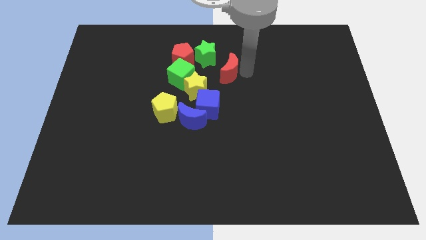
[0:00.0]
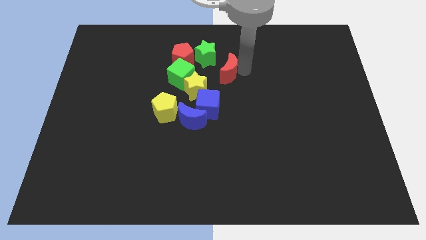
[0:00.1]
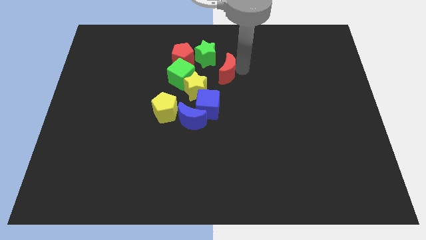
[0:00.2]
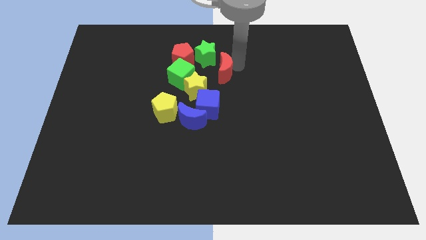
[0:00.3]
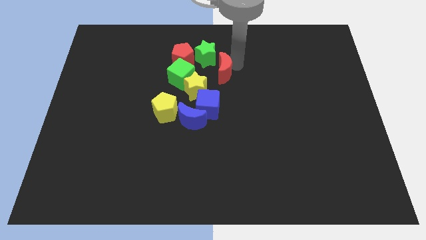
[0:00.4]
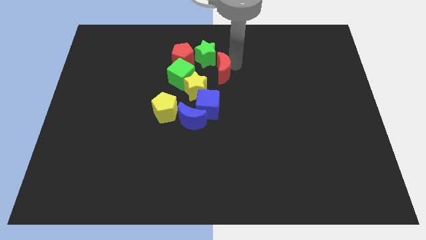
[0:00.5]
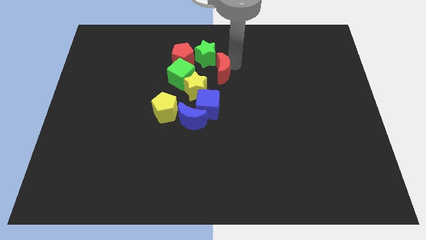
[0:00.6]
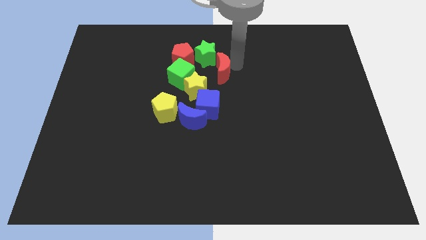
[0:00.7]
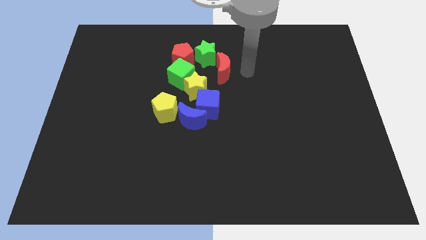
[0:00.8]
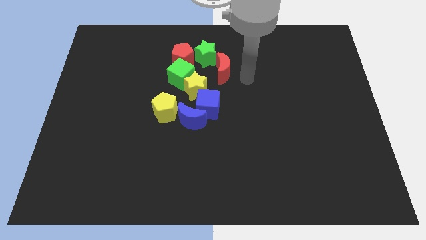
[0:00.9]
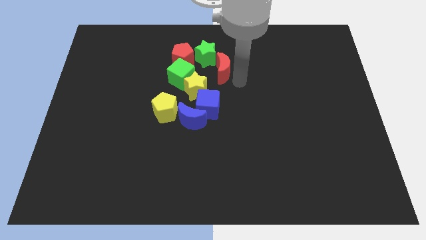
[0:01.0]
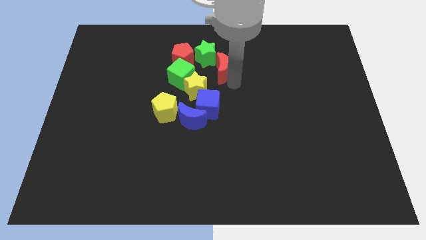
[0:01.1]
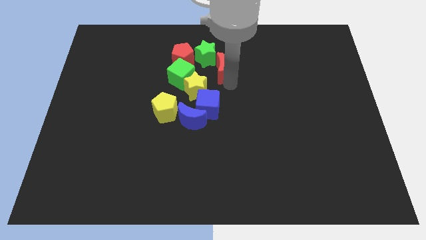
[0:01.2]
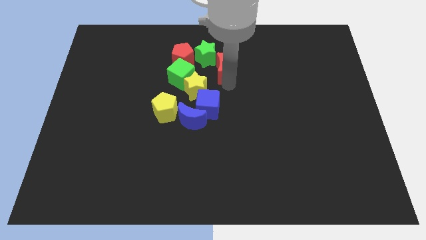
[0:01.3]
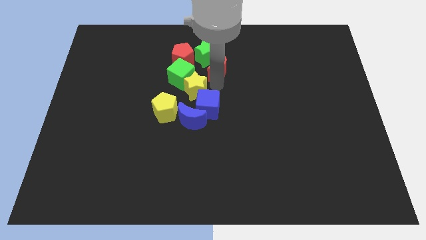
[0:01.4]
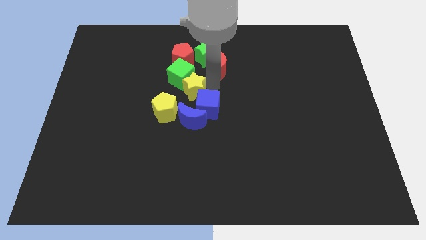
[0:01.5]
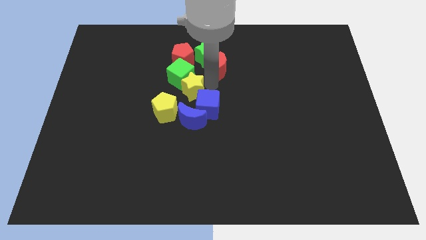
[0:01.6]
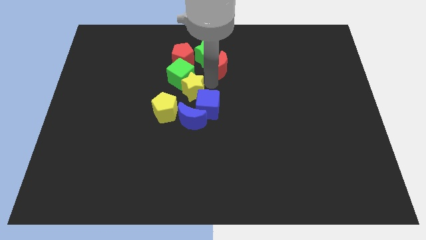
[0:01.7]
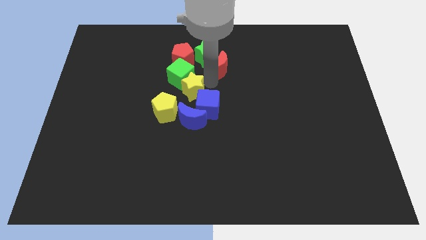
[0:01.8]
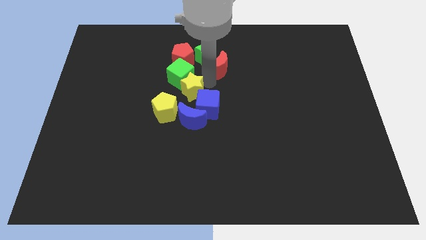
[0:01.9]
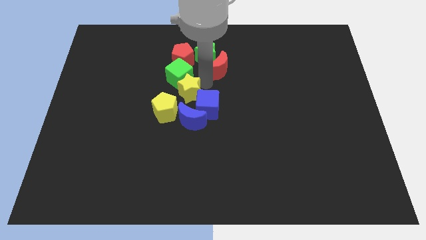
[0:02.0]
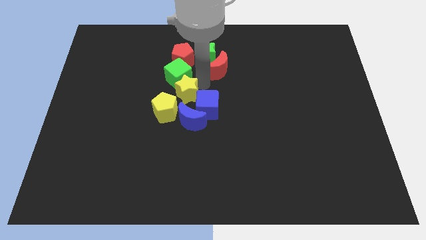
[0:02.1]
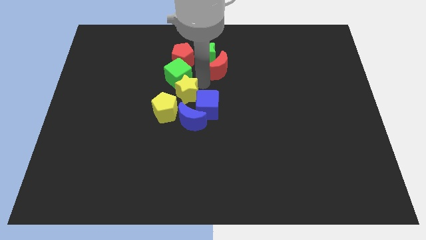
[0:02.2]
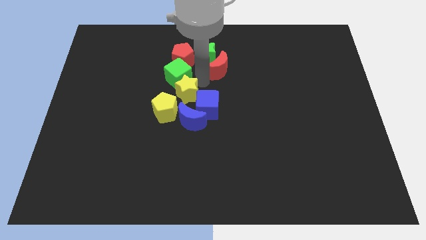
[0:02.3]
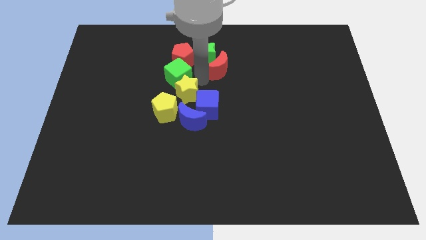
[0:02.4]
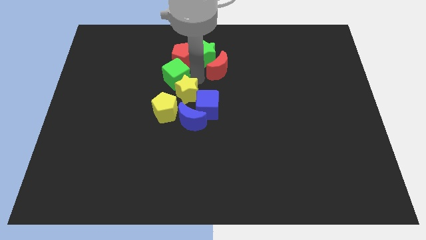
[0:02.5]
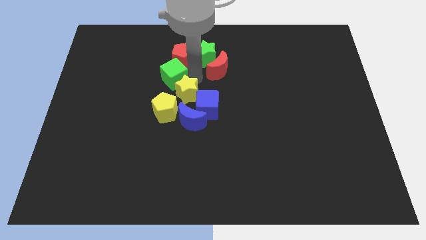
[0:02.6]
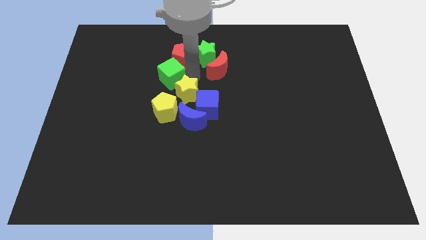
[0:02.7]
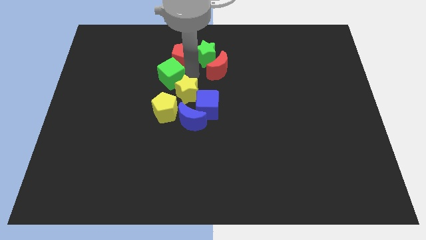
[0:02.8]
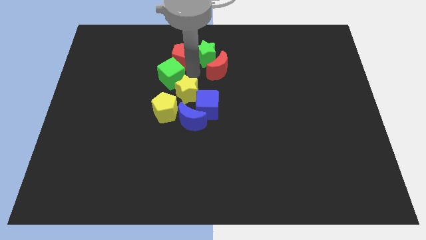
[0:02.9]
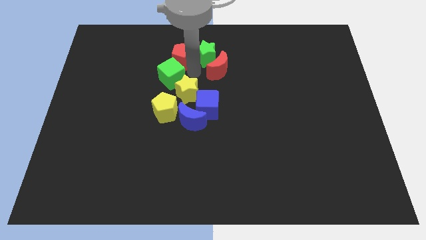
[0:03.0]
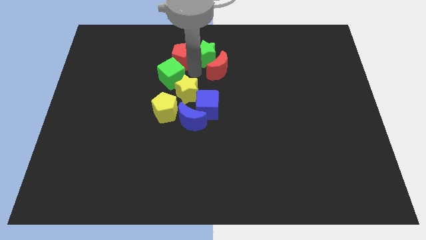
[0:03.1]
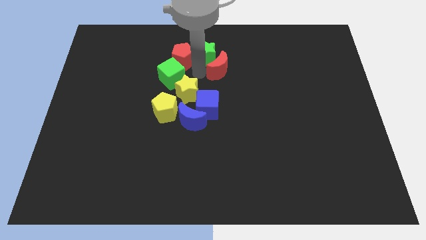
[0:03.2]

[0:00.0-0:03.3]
move the red moon yellow star and red pentagon slightly to the left

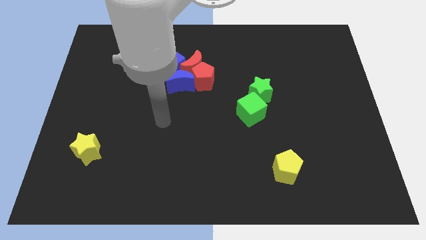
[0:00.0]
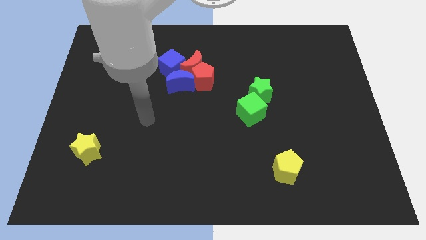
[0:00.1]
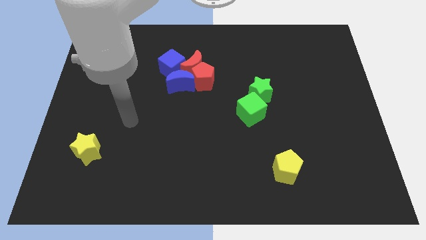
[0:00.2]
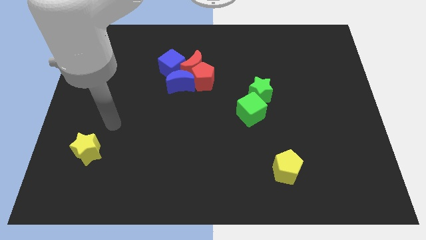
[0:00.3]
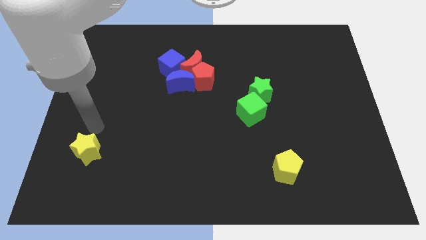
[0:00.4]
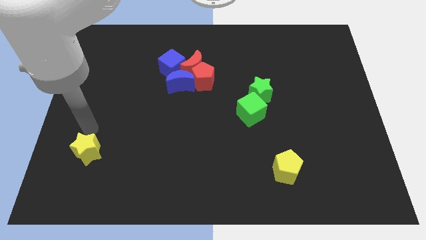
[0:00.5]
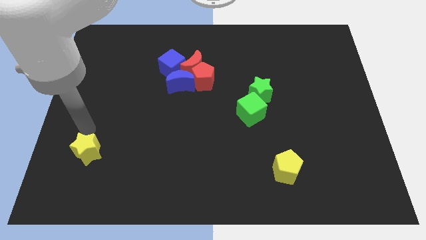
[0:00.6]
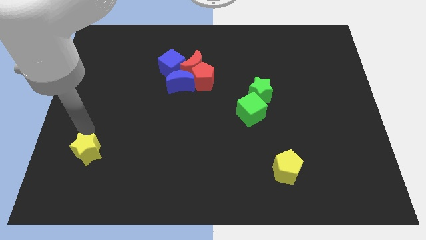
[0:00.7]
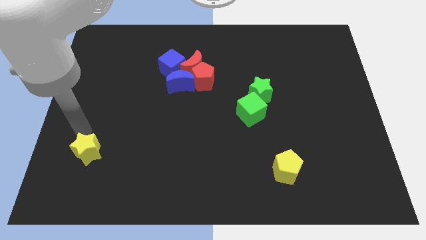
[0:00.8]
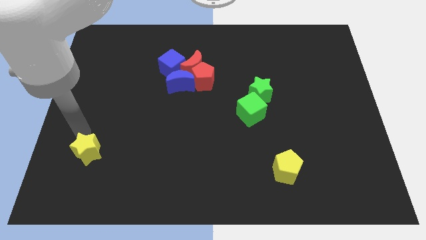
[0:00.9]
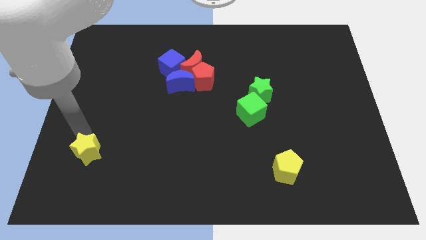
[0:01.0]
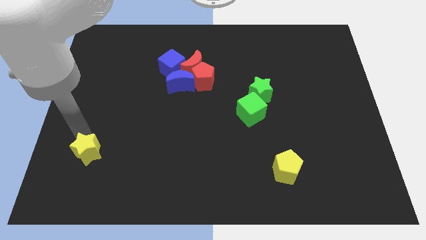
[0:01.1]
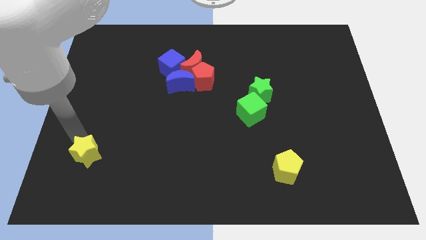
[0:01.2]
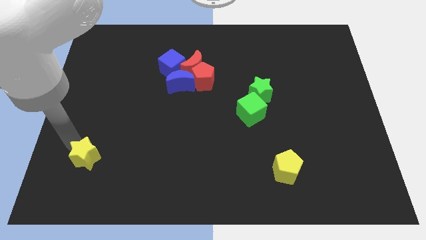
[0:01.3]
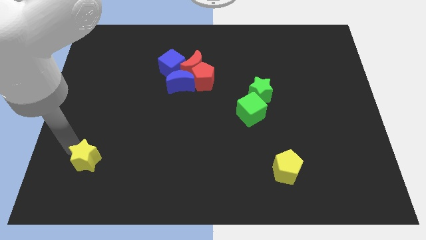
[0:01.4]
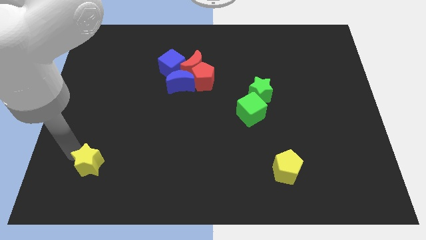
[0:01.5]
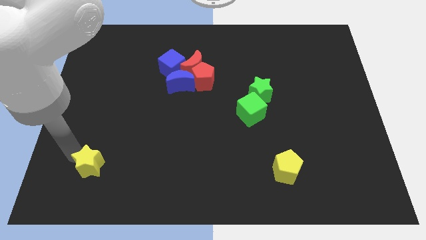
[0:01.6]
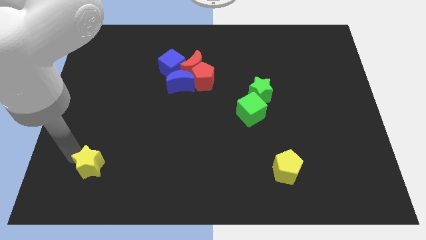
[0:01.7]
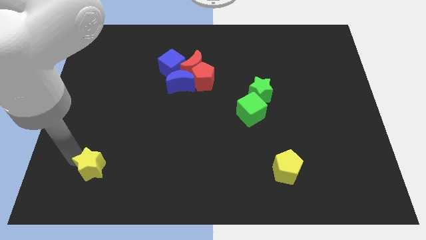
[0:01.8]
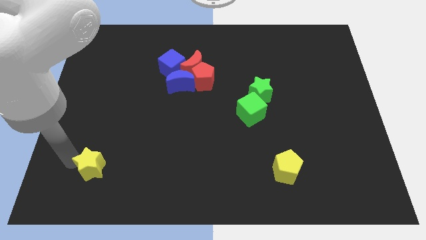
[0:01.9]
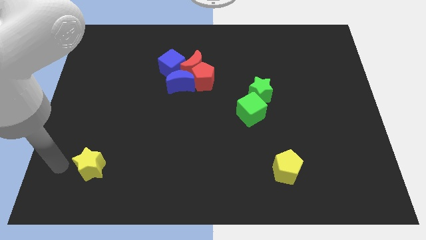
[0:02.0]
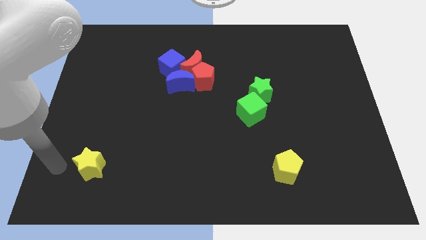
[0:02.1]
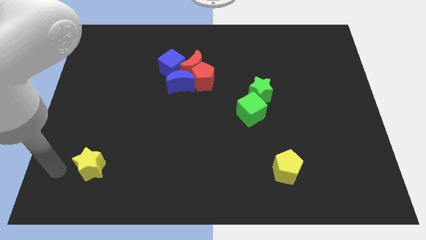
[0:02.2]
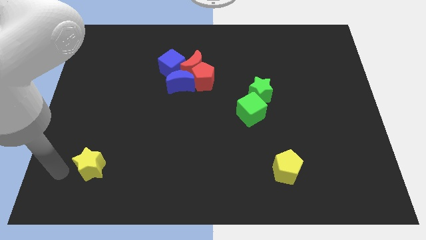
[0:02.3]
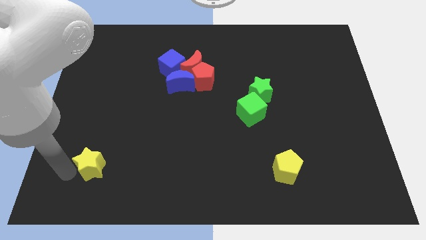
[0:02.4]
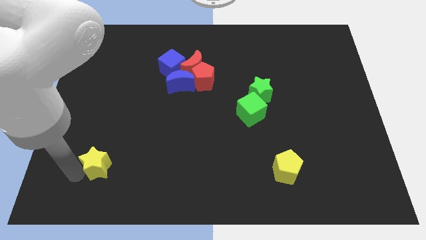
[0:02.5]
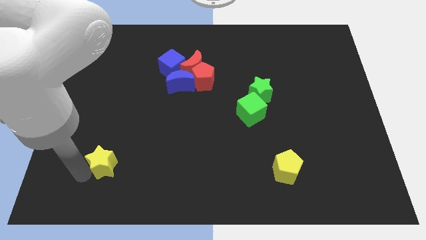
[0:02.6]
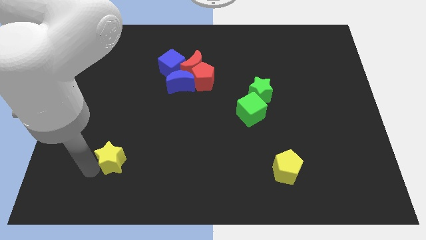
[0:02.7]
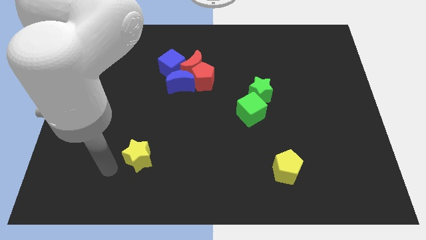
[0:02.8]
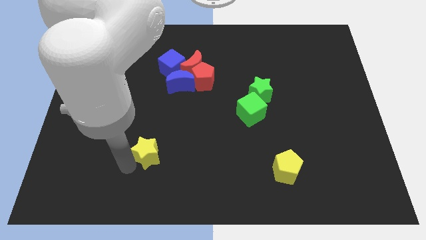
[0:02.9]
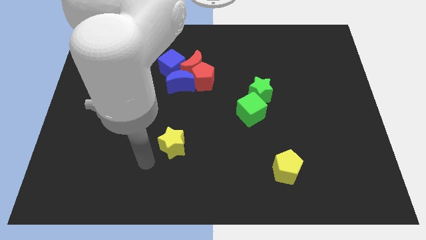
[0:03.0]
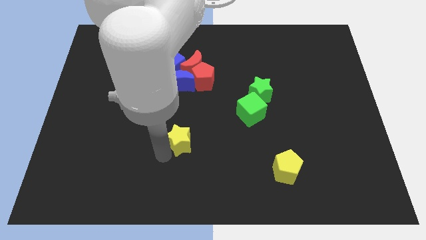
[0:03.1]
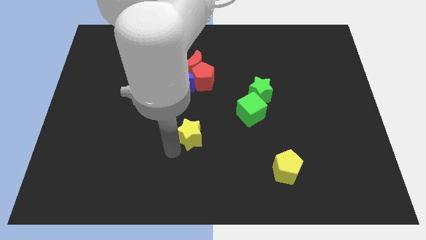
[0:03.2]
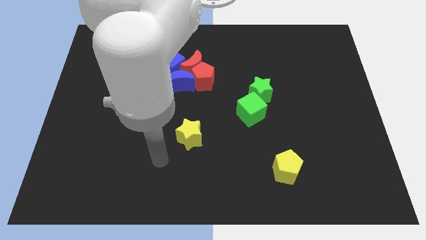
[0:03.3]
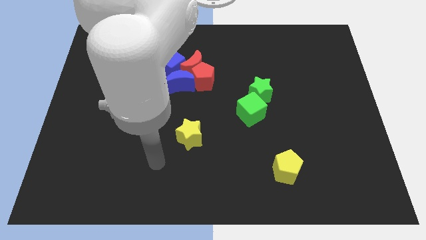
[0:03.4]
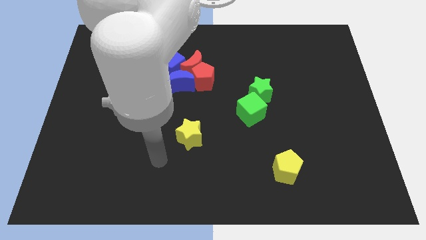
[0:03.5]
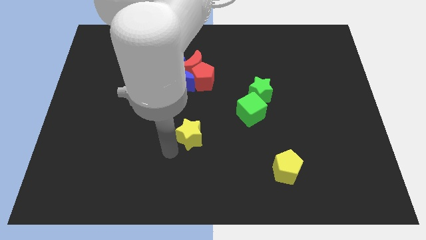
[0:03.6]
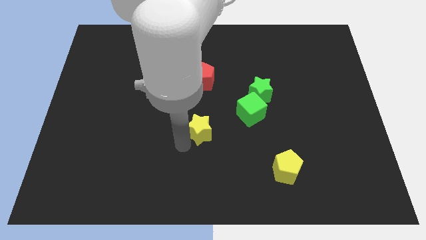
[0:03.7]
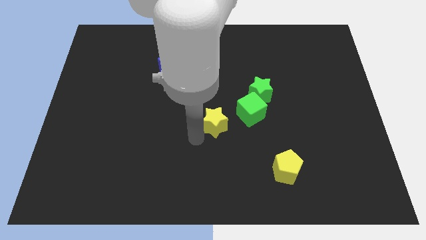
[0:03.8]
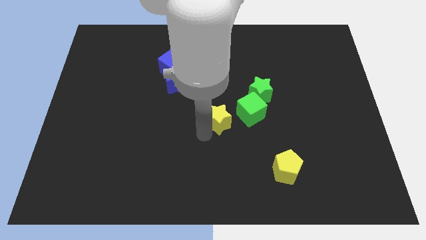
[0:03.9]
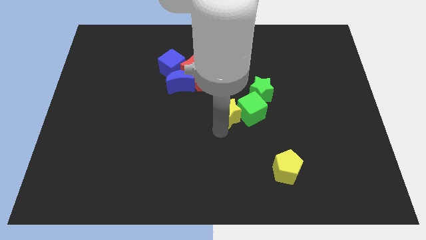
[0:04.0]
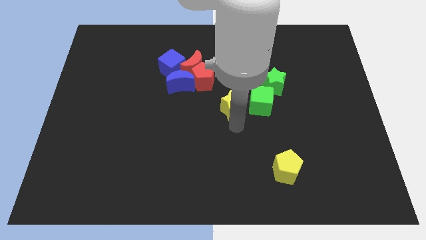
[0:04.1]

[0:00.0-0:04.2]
slide the yellow star into the green blocks

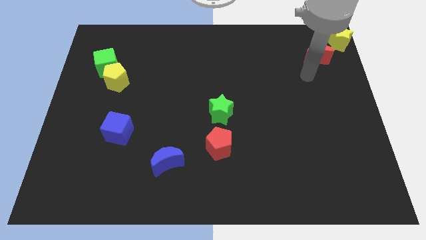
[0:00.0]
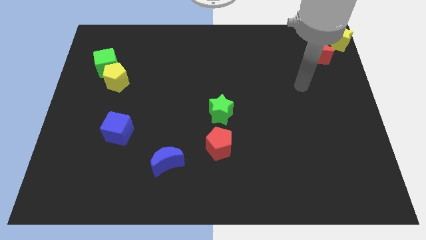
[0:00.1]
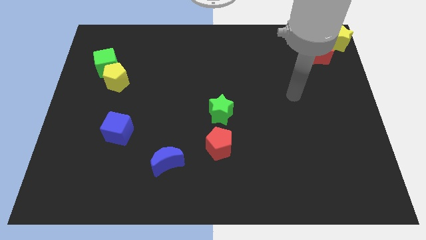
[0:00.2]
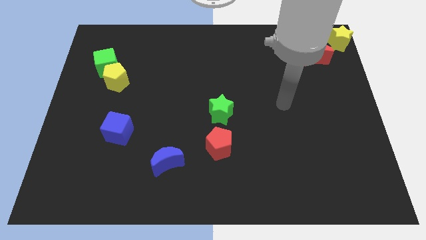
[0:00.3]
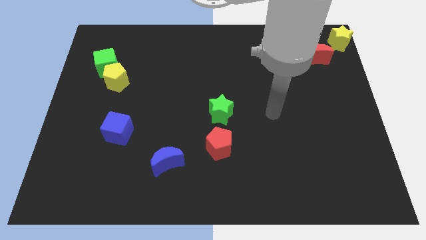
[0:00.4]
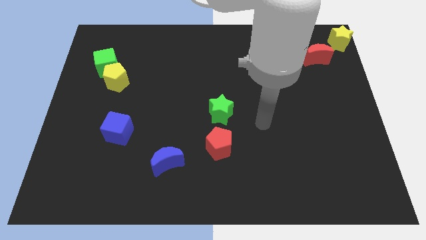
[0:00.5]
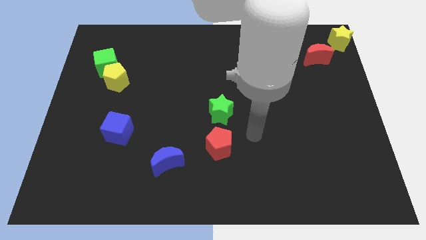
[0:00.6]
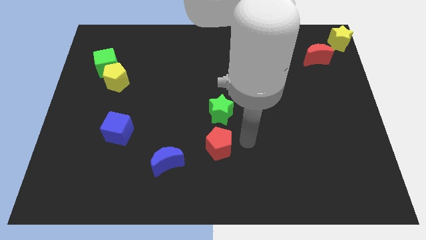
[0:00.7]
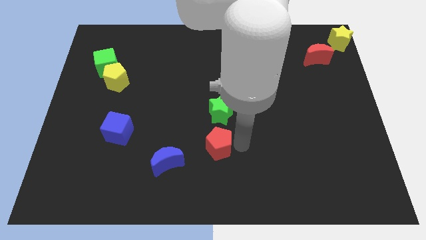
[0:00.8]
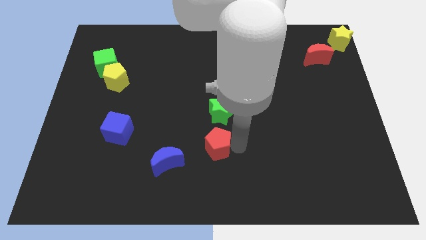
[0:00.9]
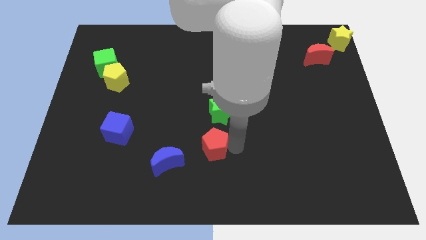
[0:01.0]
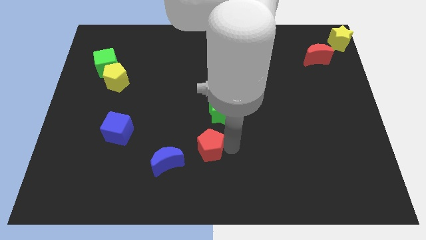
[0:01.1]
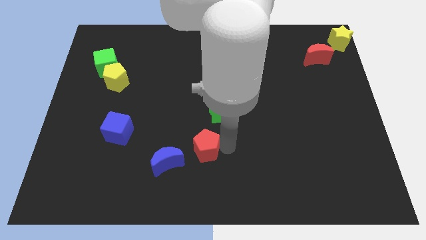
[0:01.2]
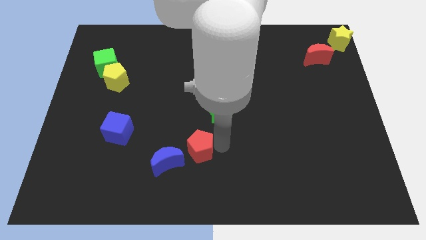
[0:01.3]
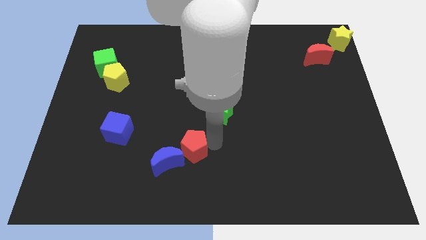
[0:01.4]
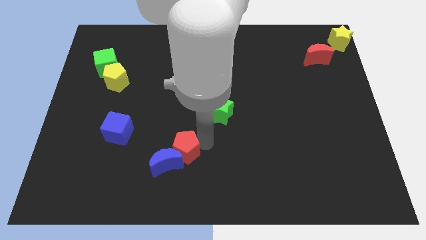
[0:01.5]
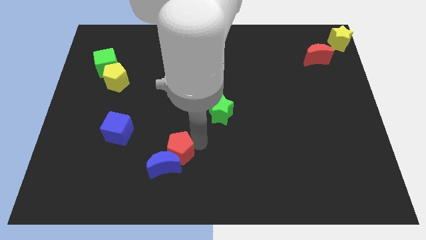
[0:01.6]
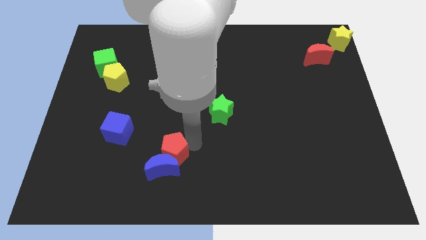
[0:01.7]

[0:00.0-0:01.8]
push the red pentagon into the blue moon
